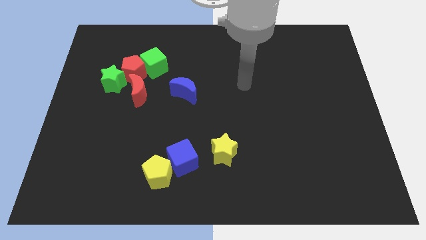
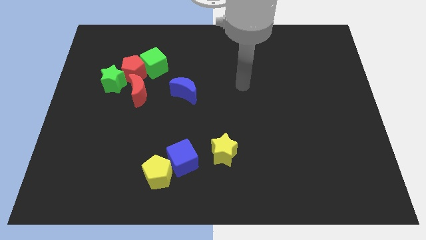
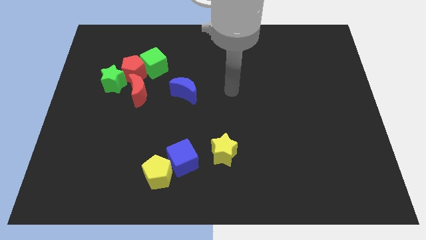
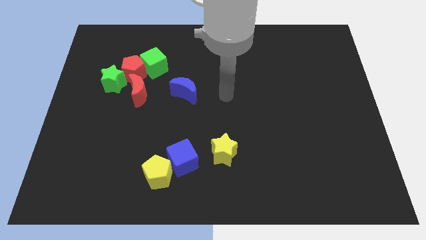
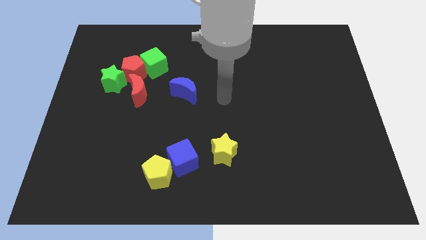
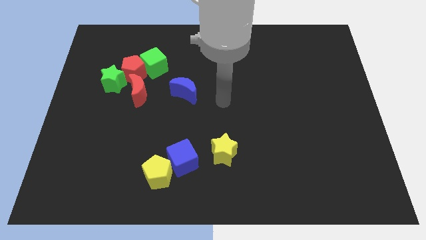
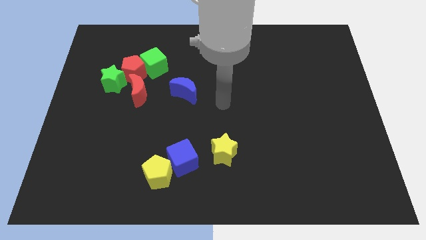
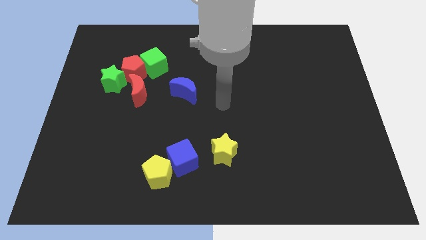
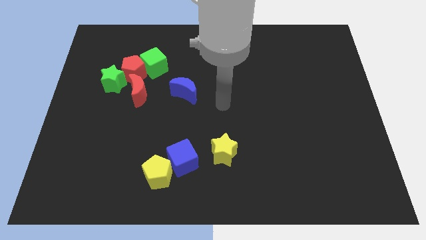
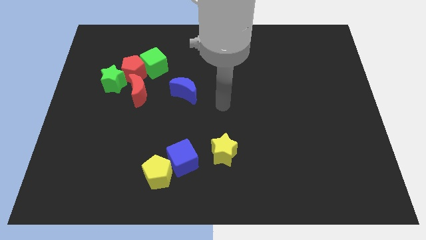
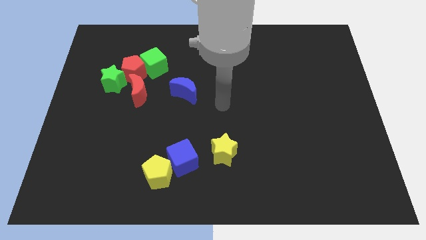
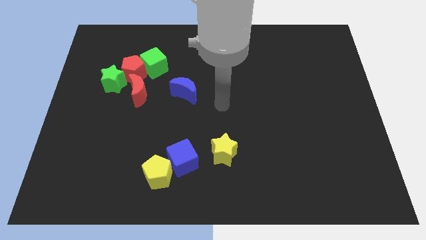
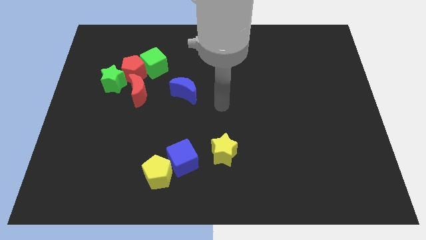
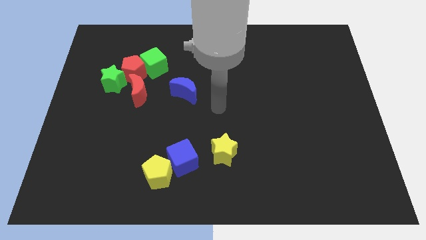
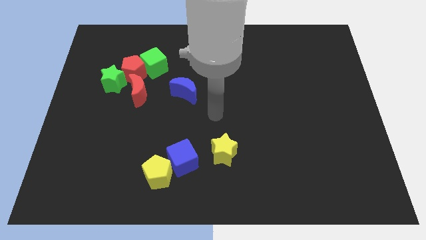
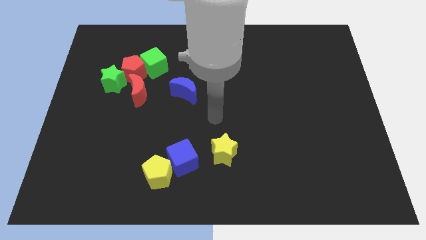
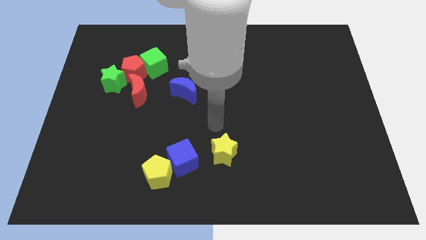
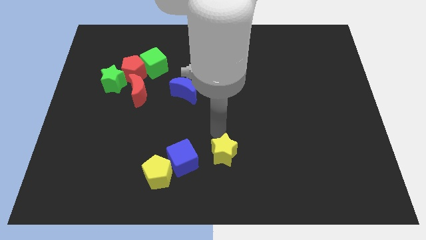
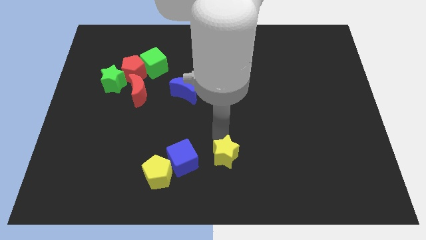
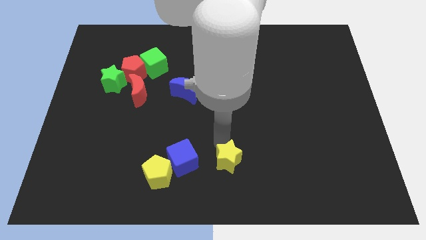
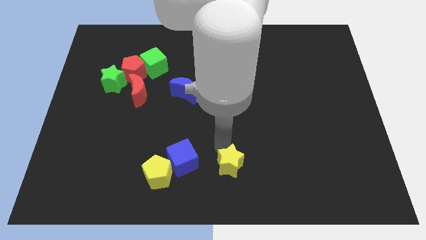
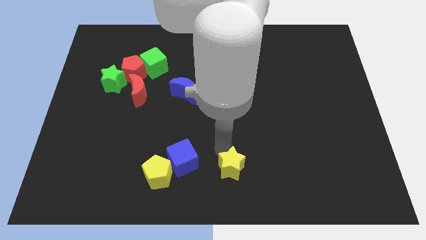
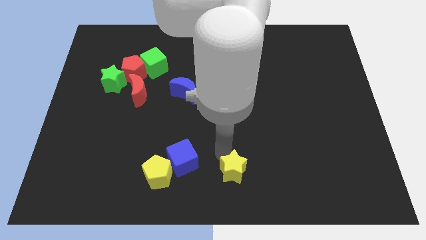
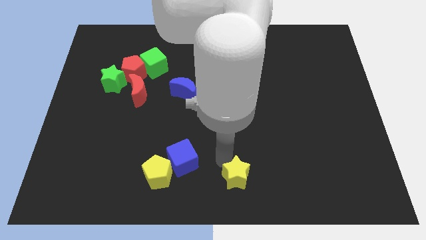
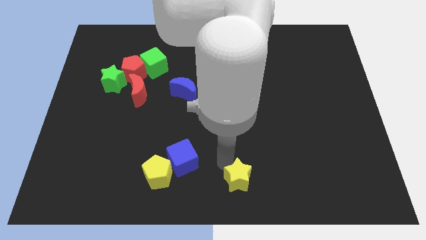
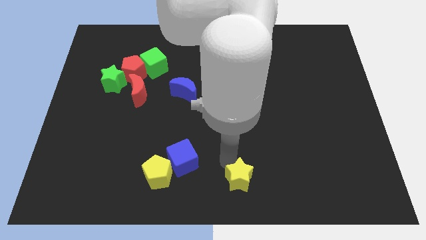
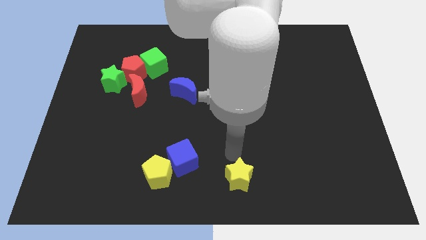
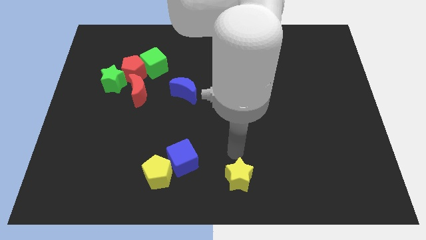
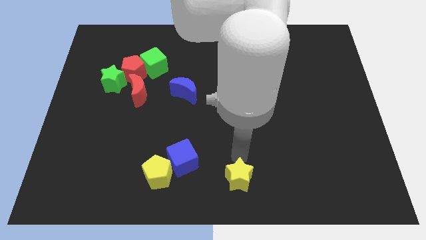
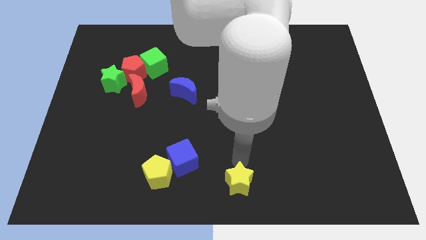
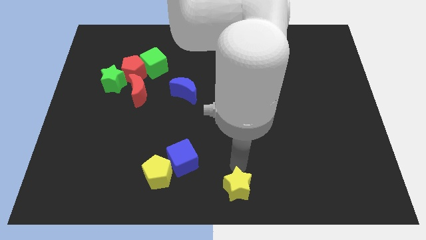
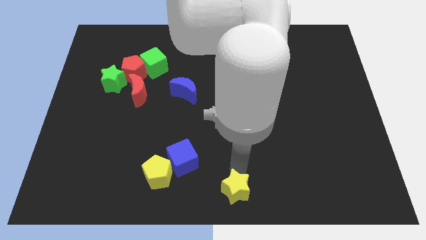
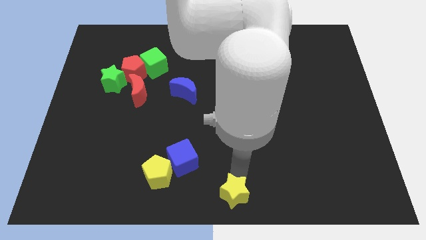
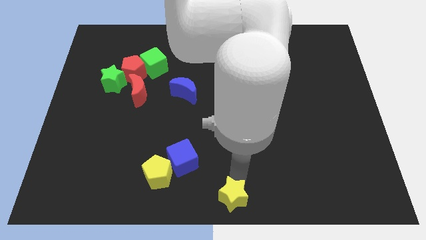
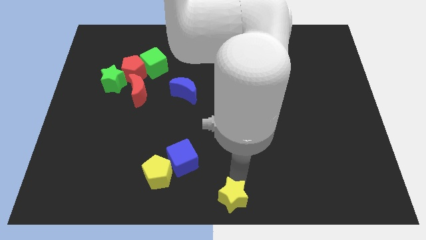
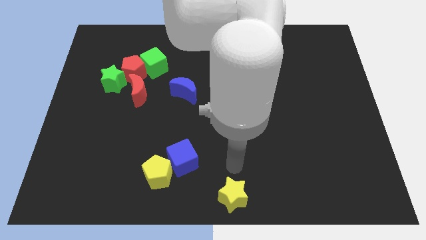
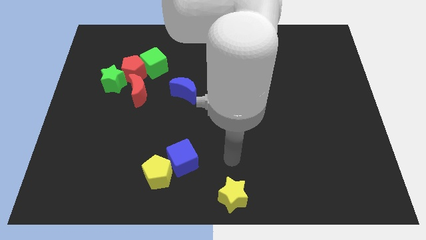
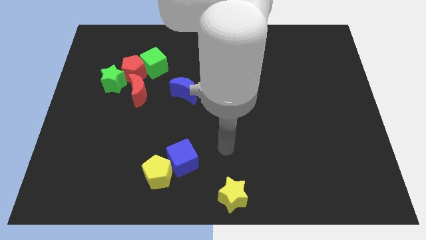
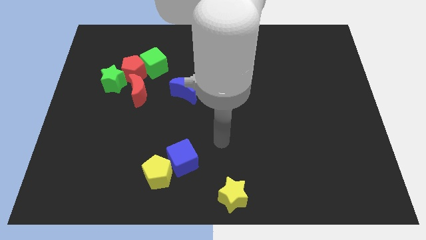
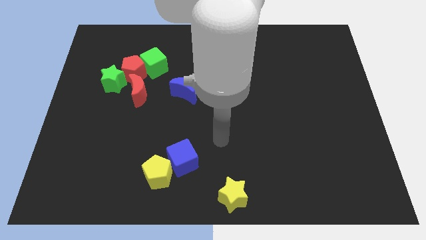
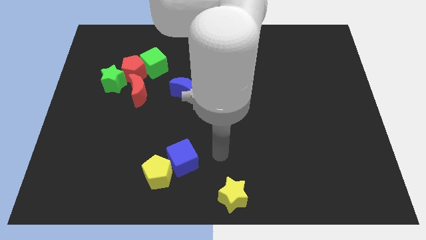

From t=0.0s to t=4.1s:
push the yellow star to the bottom center of the board

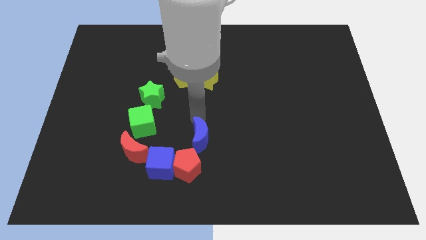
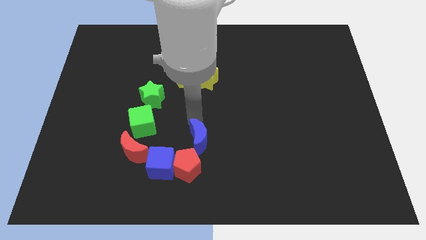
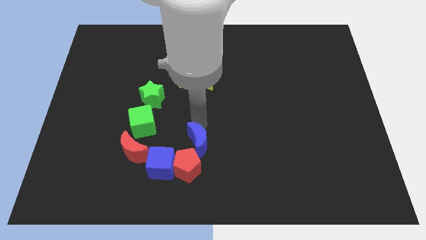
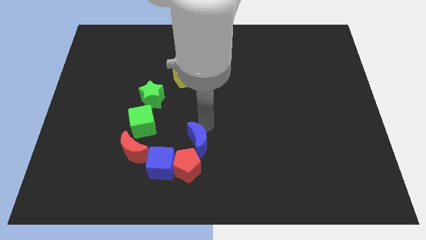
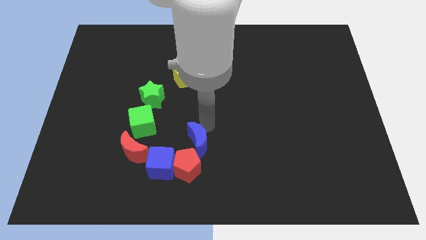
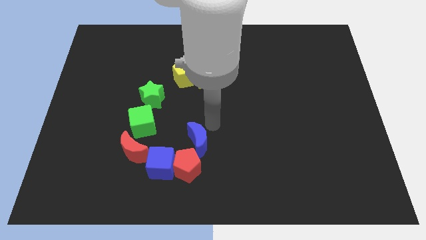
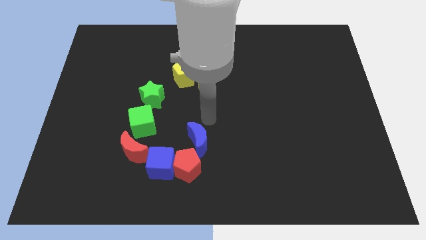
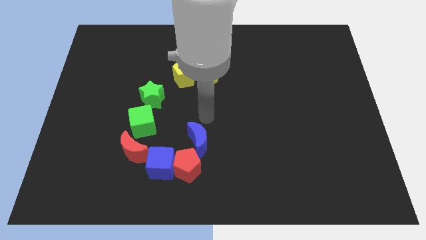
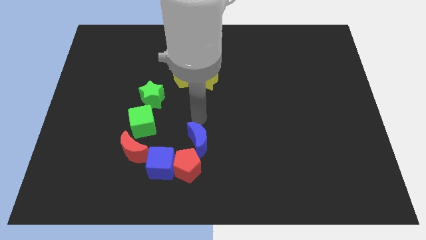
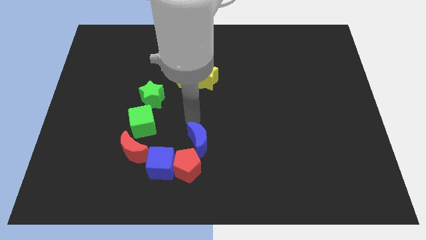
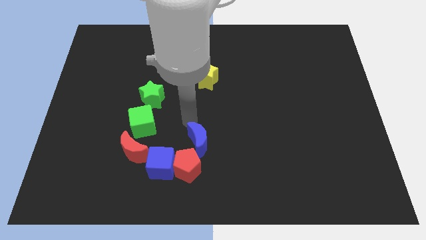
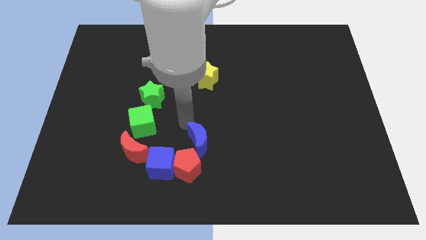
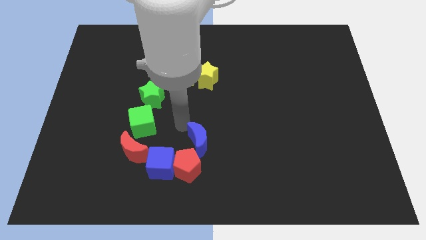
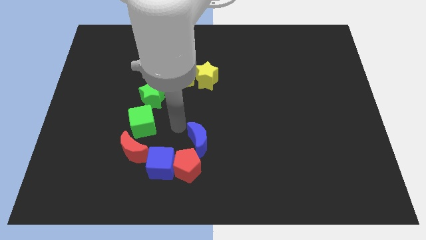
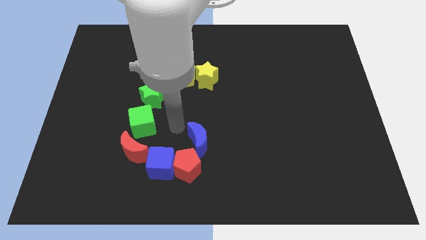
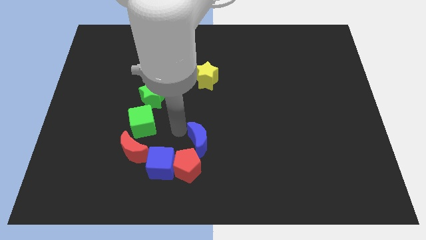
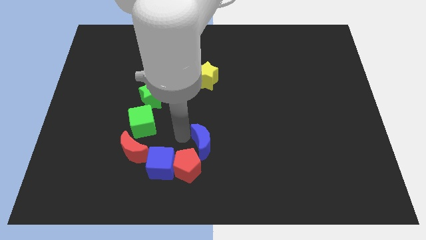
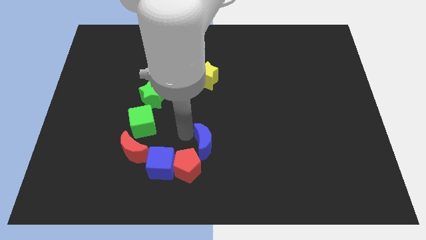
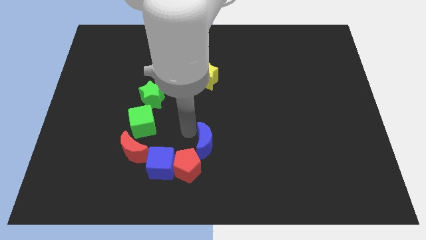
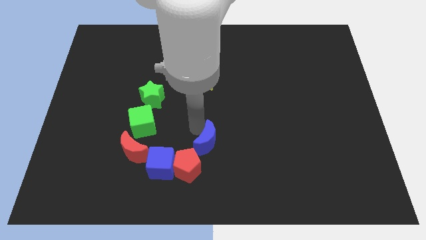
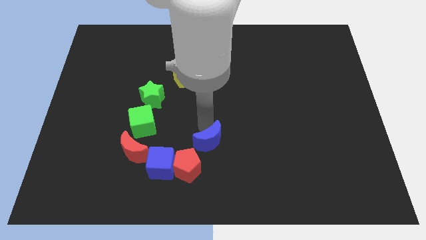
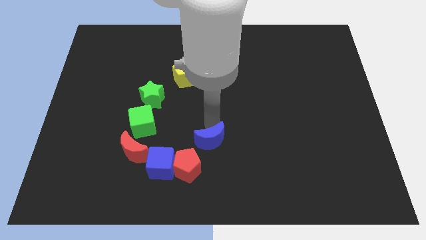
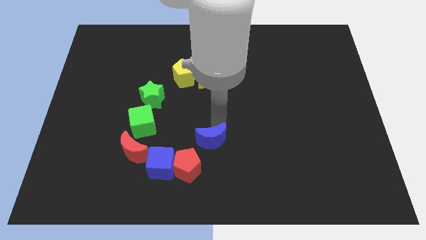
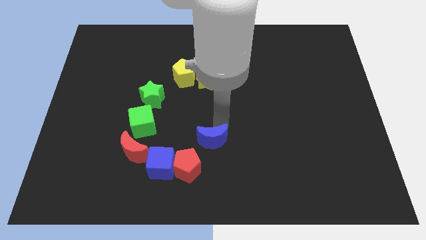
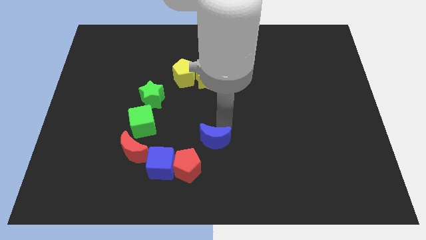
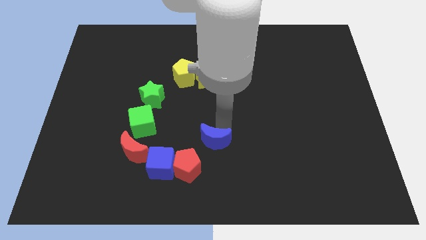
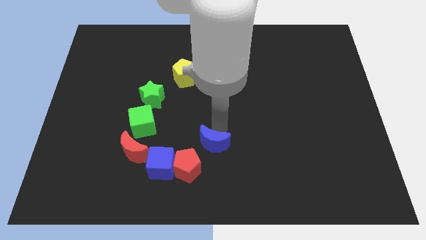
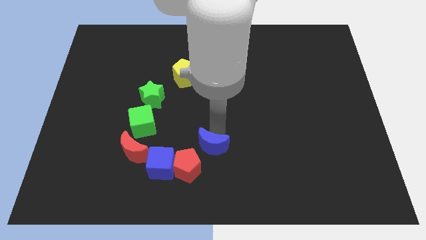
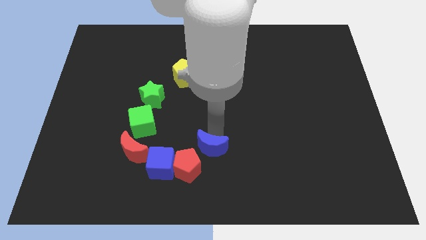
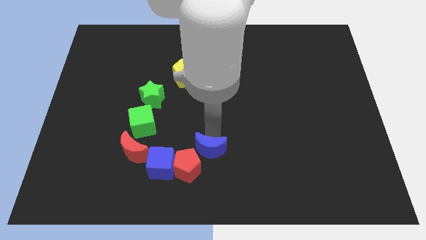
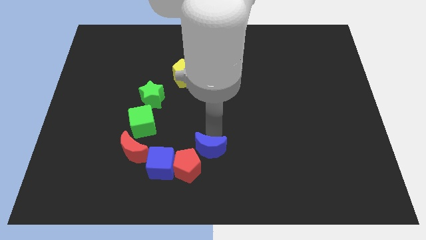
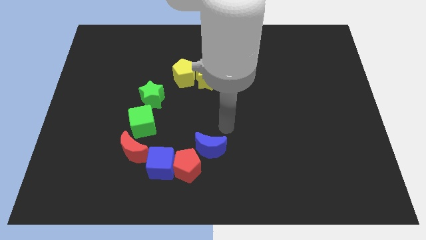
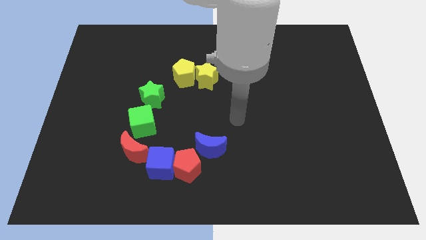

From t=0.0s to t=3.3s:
move blue moon diagonally above red moon

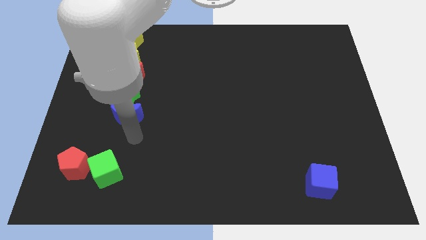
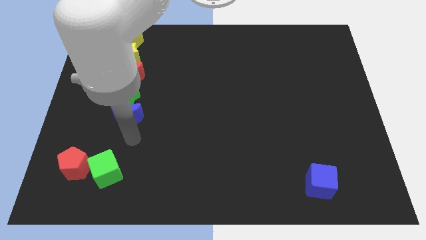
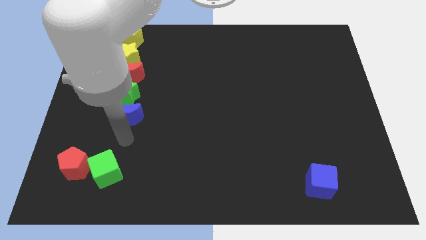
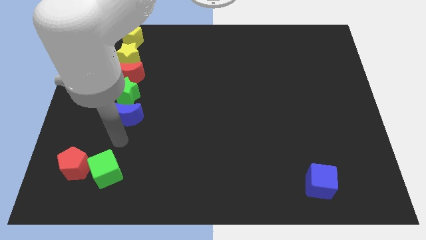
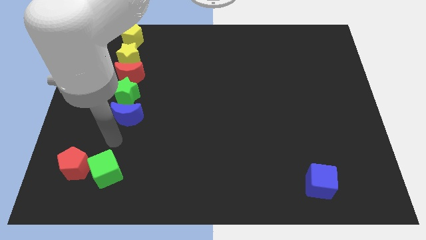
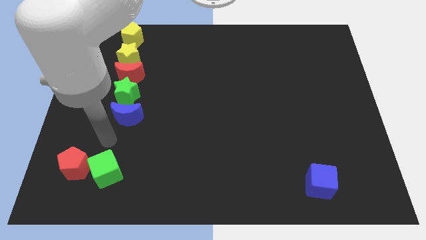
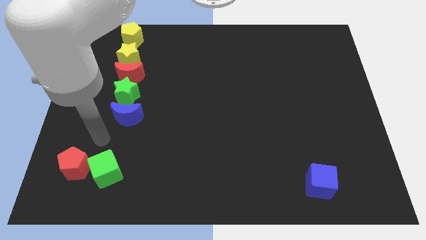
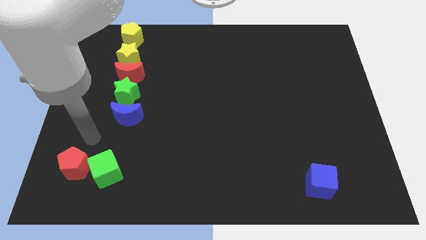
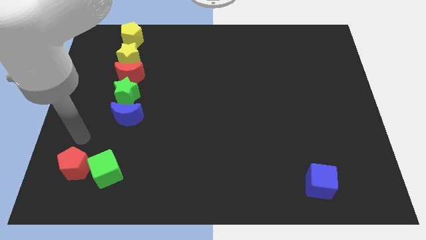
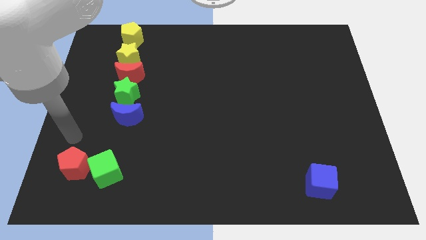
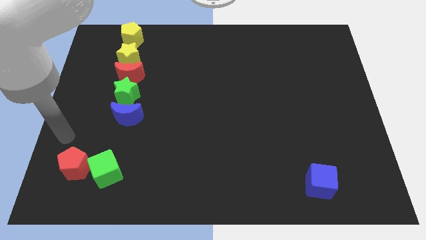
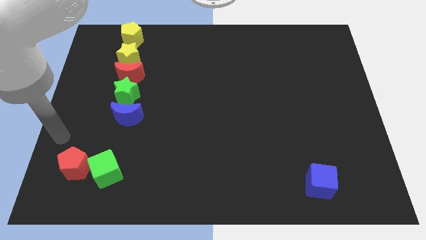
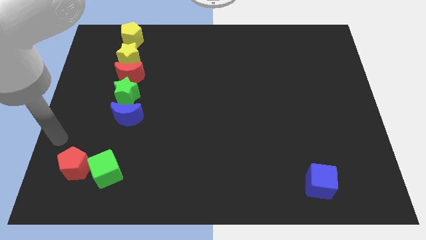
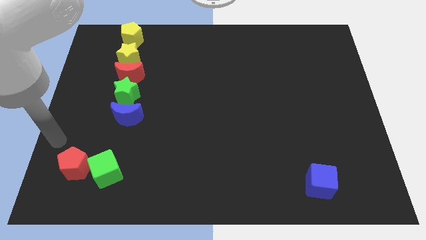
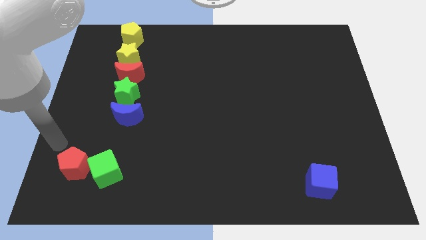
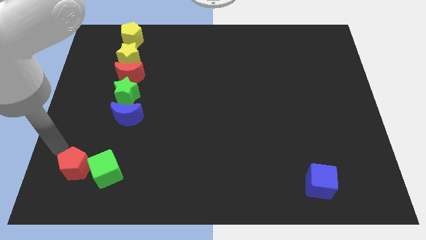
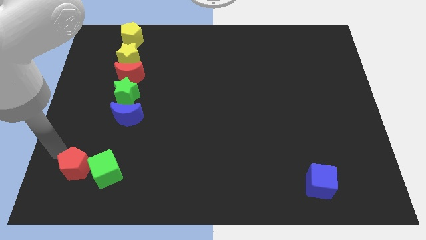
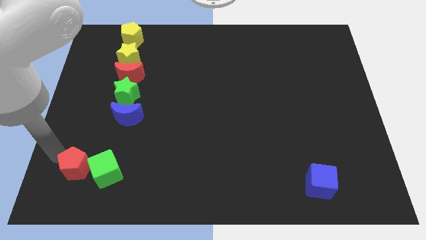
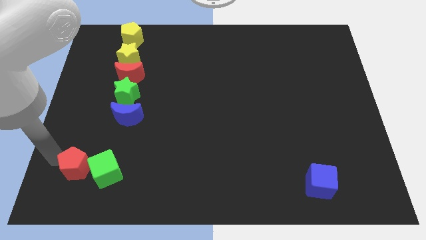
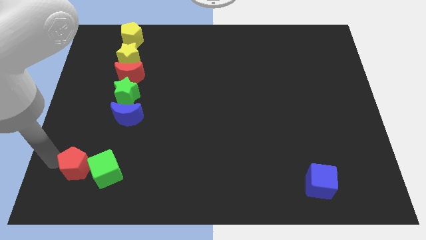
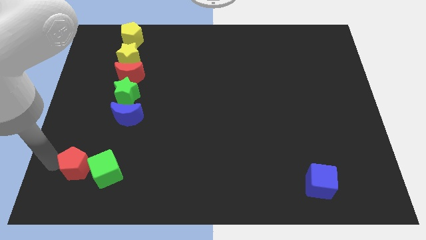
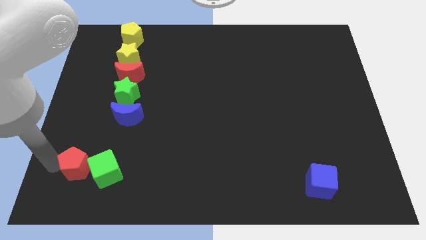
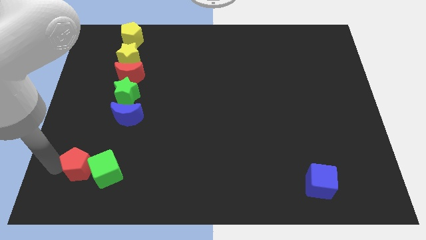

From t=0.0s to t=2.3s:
move your arm towards red pentagon
